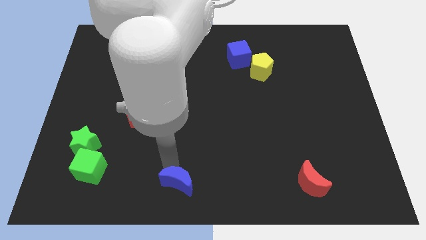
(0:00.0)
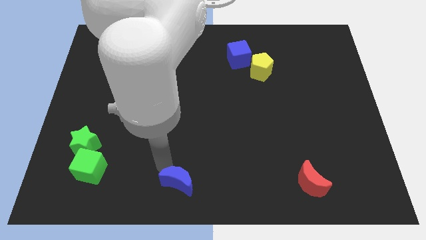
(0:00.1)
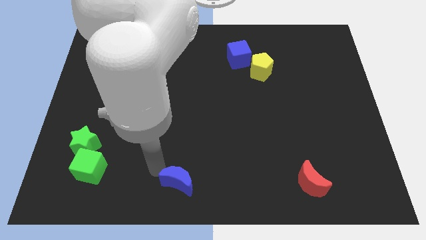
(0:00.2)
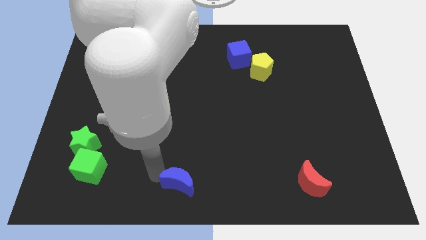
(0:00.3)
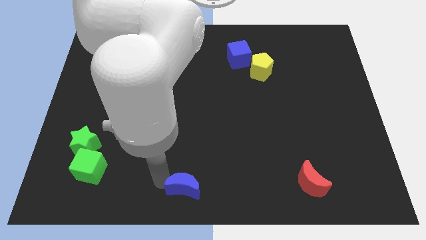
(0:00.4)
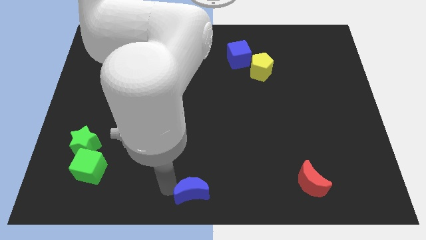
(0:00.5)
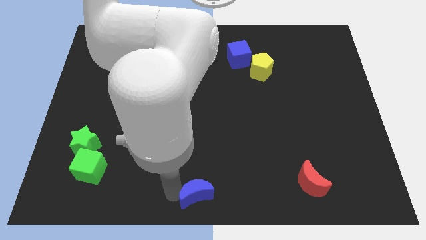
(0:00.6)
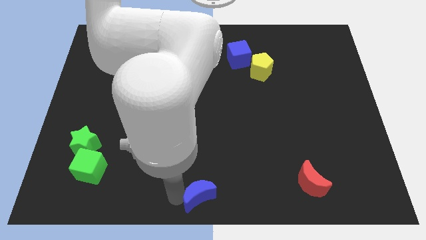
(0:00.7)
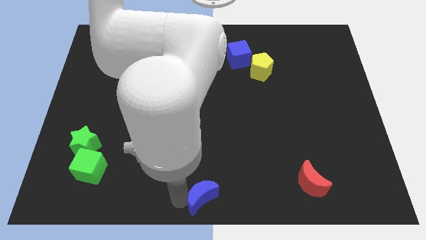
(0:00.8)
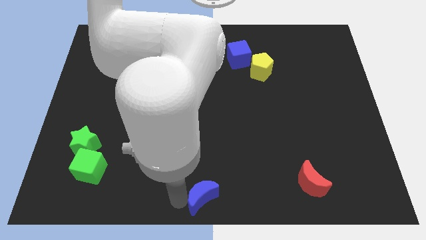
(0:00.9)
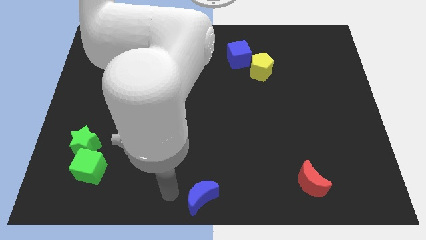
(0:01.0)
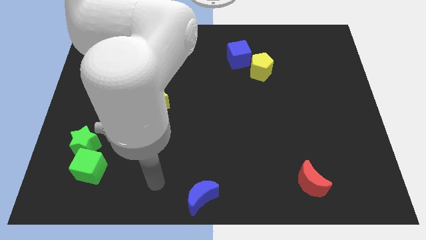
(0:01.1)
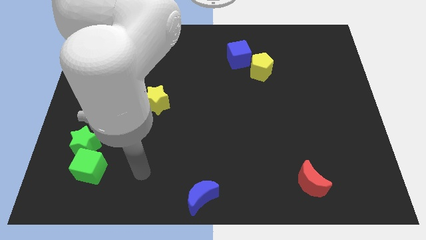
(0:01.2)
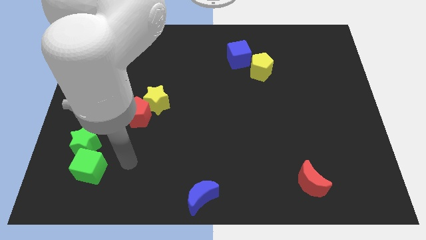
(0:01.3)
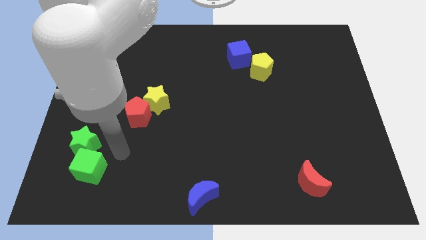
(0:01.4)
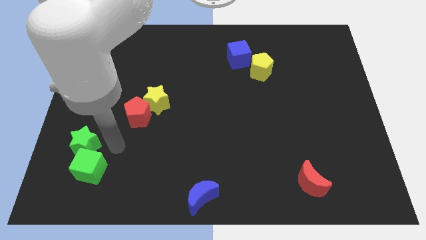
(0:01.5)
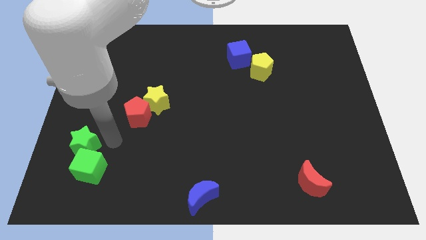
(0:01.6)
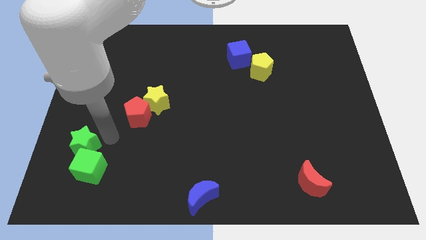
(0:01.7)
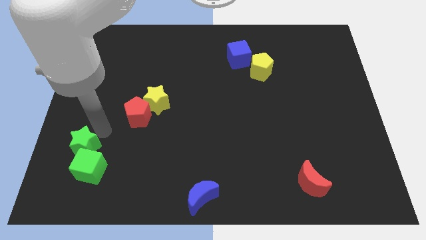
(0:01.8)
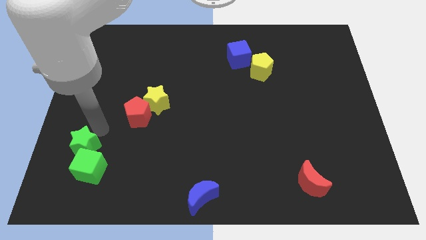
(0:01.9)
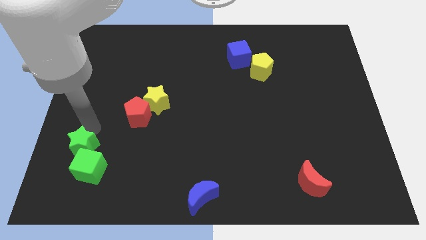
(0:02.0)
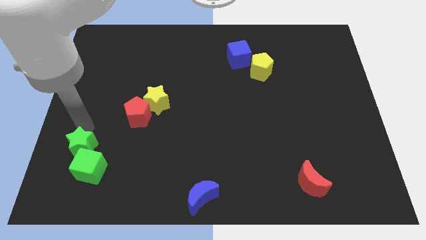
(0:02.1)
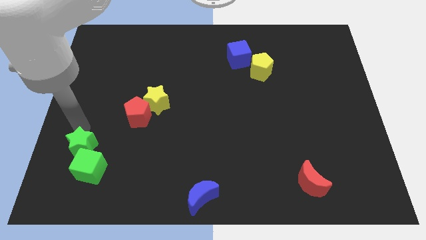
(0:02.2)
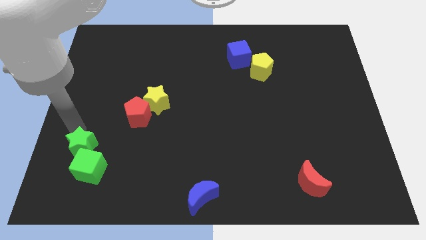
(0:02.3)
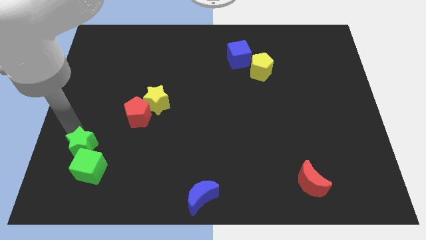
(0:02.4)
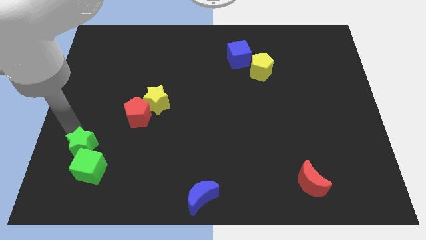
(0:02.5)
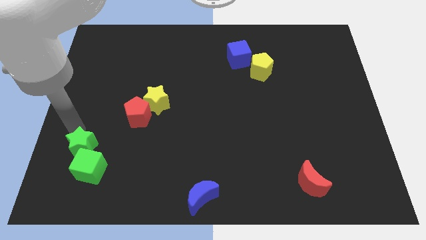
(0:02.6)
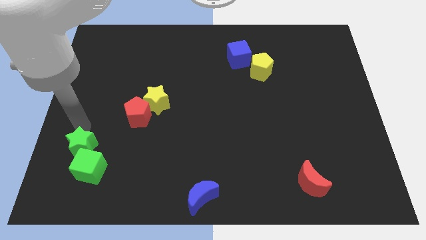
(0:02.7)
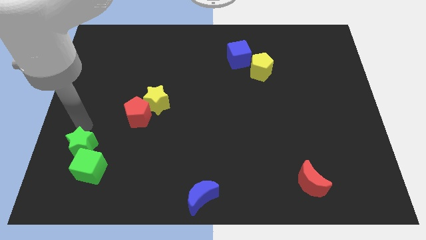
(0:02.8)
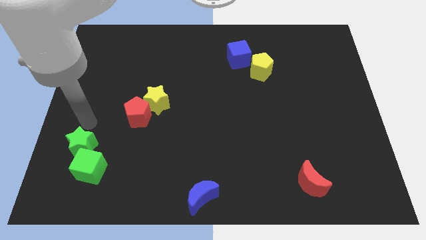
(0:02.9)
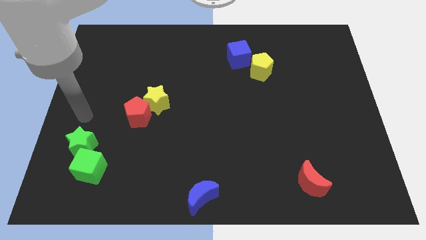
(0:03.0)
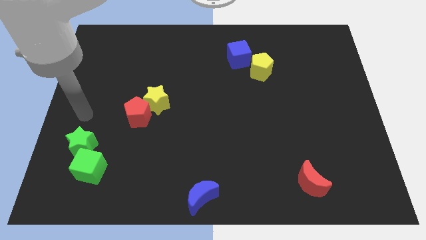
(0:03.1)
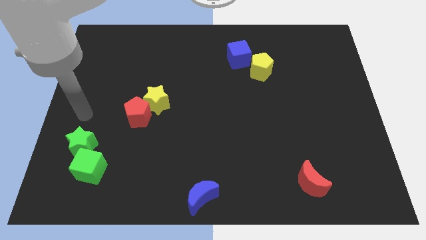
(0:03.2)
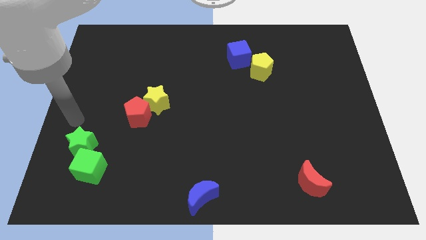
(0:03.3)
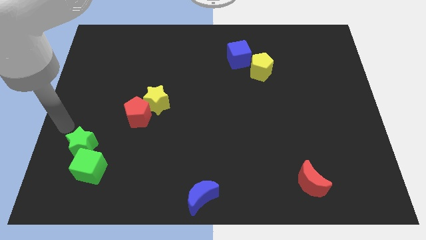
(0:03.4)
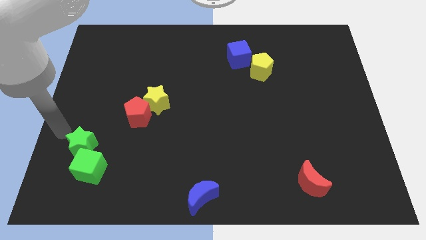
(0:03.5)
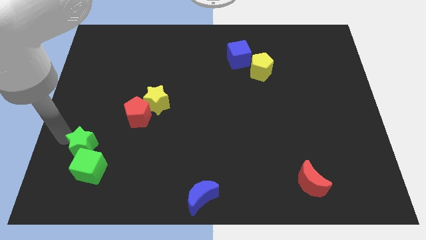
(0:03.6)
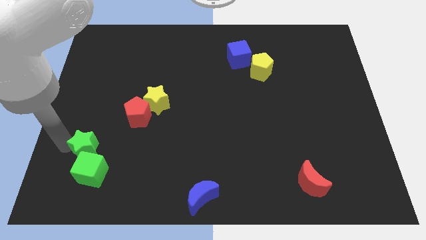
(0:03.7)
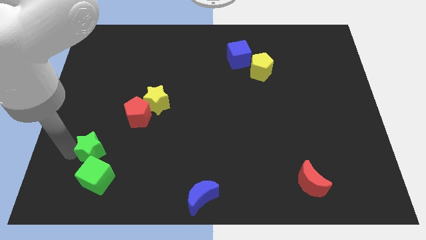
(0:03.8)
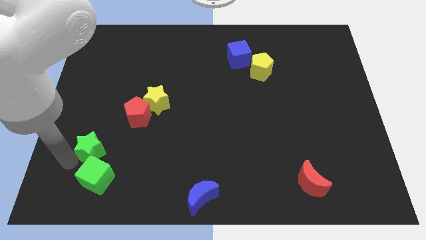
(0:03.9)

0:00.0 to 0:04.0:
slightly push the green blocks down to the board

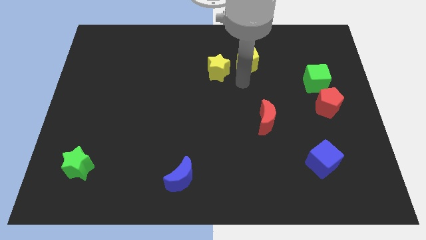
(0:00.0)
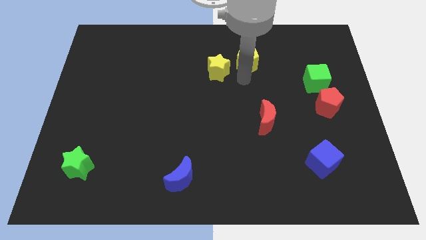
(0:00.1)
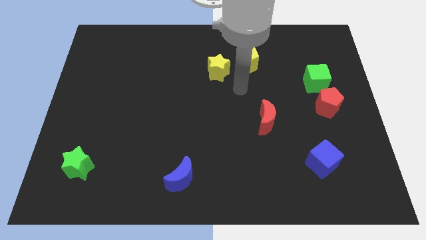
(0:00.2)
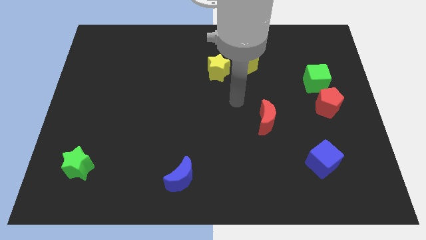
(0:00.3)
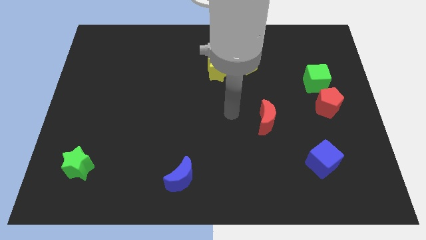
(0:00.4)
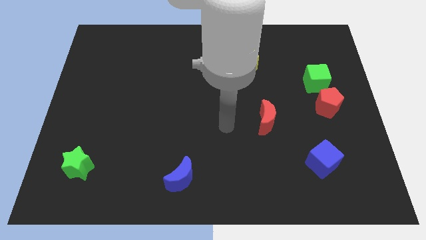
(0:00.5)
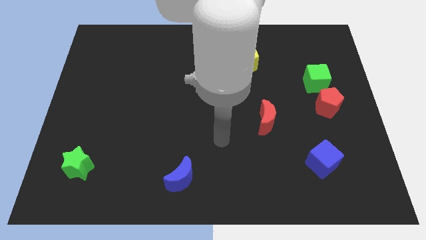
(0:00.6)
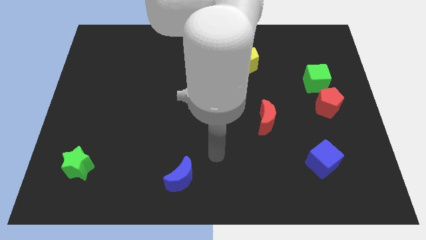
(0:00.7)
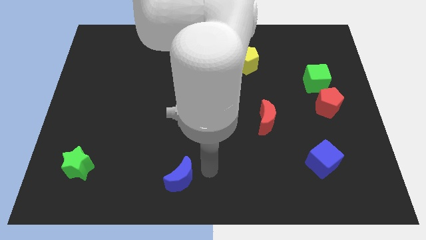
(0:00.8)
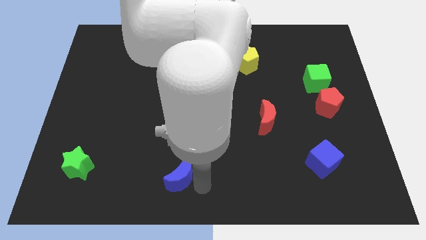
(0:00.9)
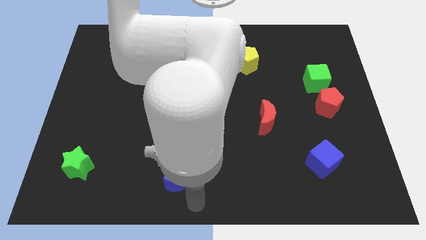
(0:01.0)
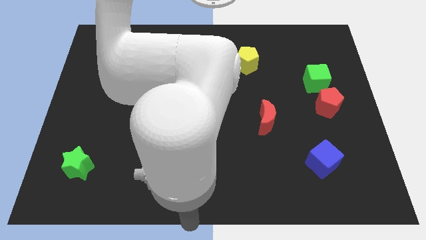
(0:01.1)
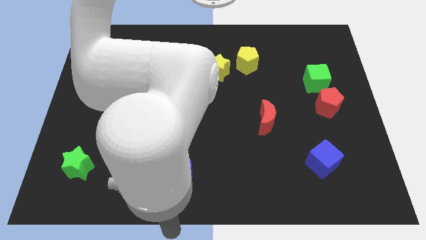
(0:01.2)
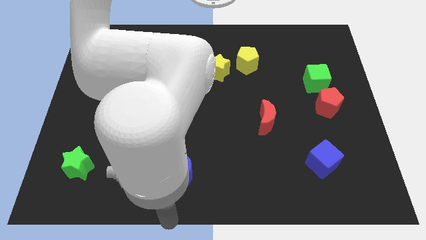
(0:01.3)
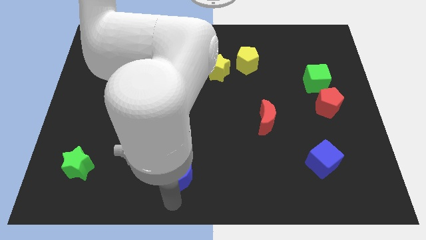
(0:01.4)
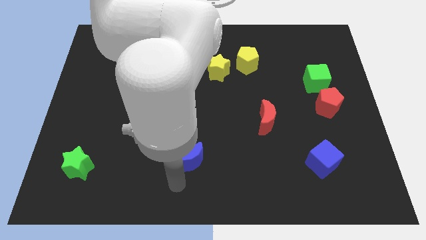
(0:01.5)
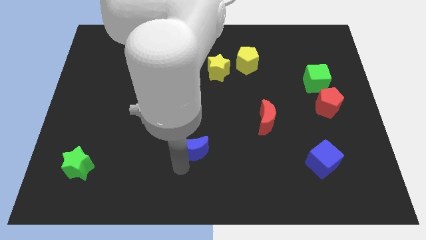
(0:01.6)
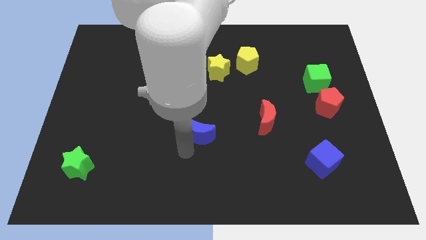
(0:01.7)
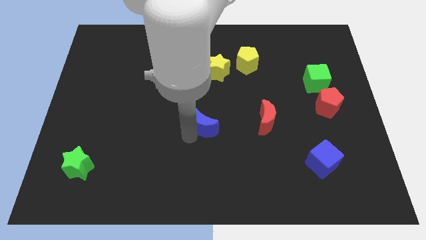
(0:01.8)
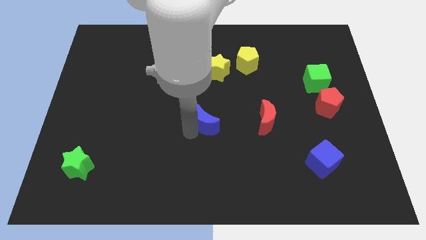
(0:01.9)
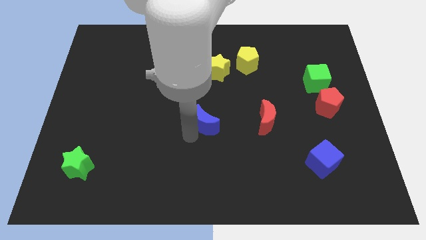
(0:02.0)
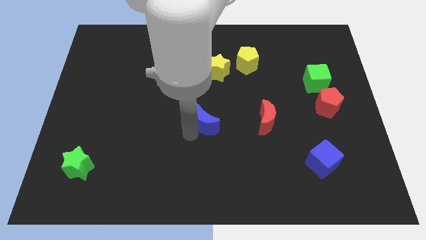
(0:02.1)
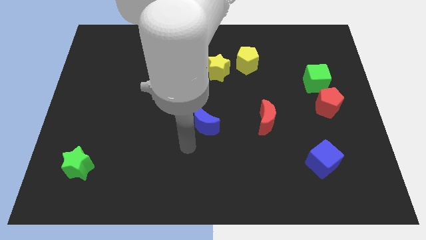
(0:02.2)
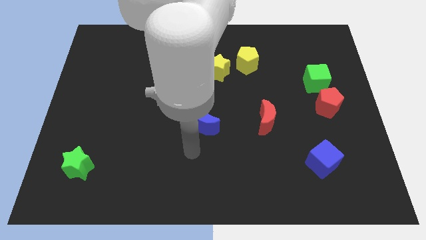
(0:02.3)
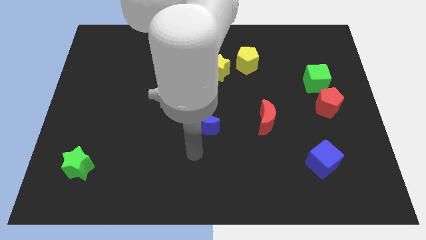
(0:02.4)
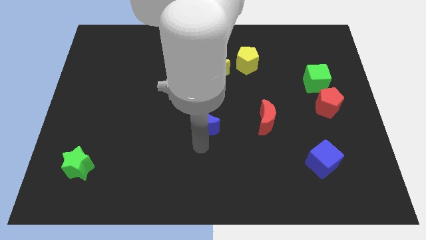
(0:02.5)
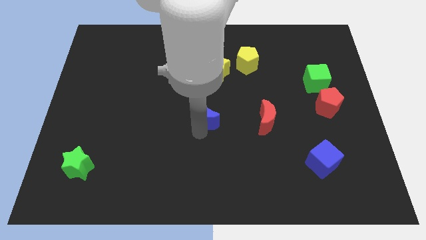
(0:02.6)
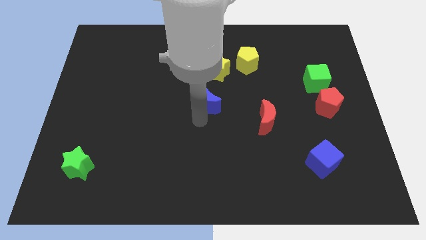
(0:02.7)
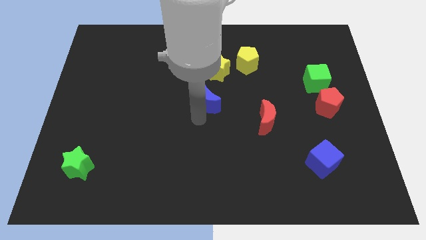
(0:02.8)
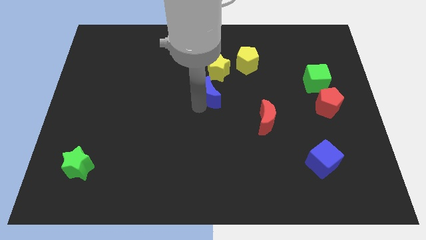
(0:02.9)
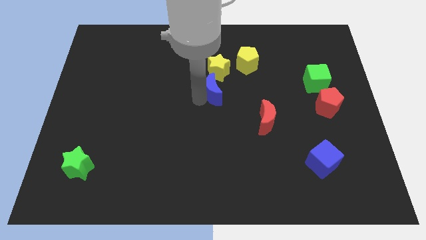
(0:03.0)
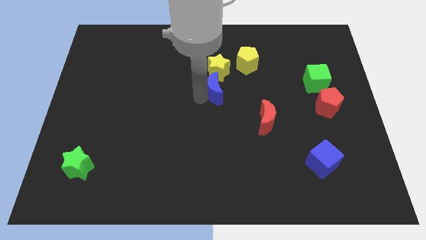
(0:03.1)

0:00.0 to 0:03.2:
place the blue moon to the center of the board

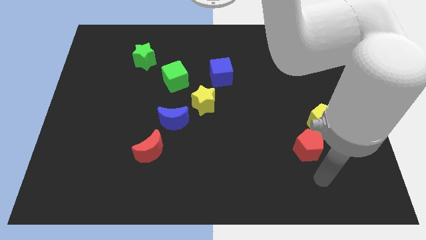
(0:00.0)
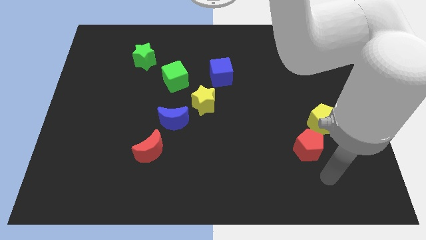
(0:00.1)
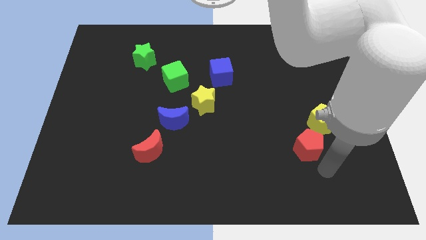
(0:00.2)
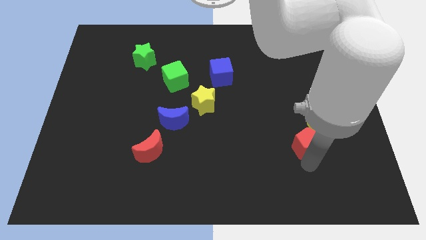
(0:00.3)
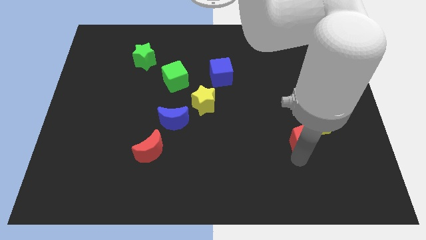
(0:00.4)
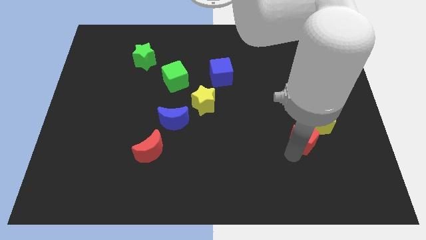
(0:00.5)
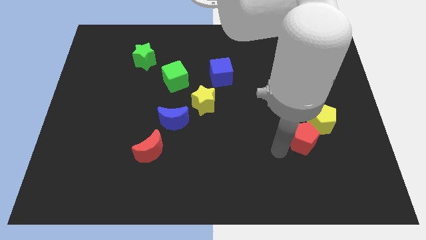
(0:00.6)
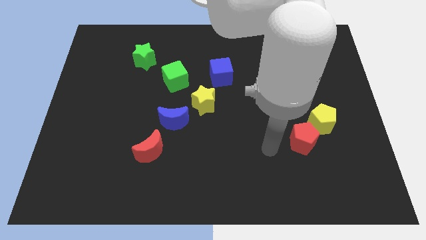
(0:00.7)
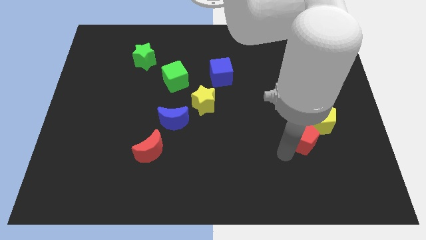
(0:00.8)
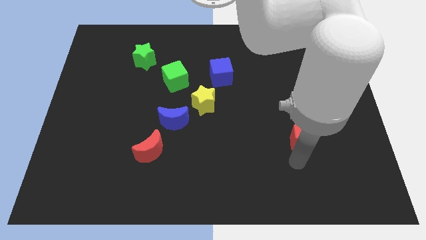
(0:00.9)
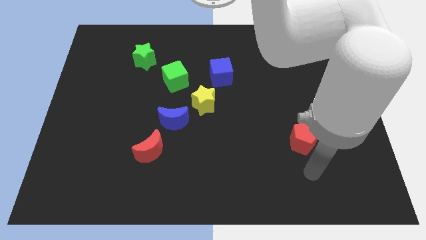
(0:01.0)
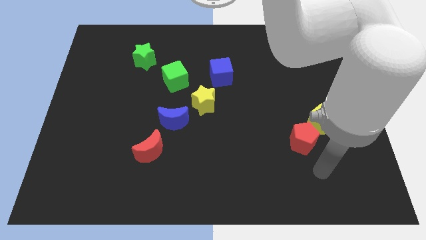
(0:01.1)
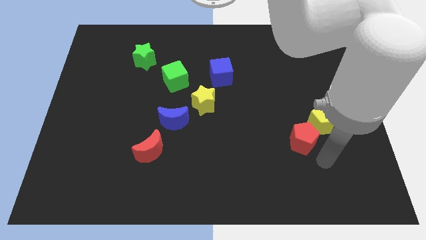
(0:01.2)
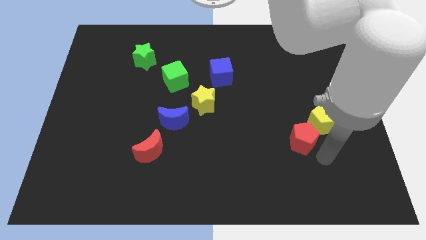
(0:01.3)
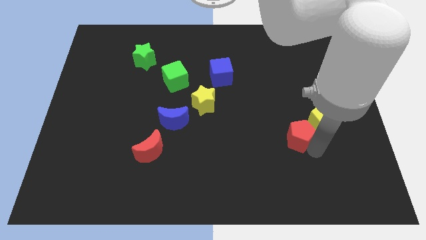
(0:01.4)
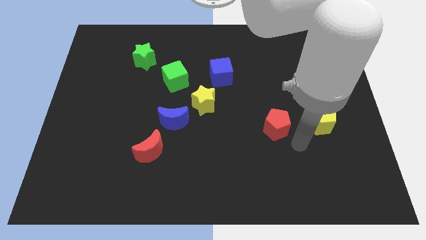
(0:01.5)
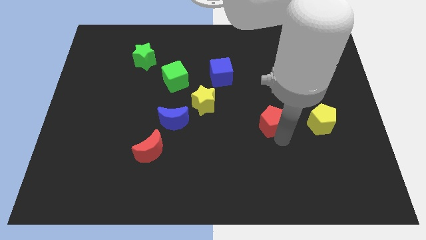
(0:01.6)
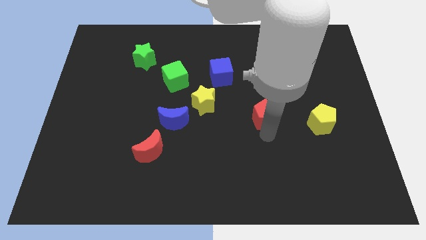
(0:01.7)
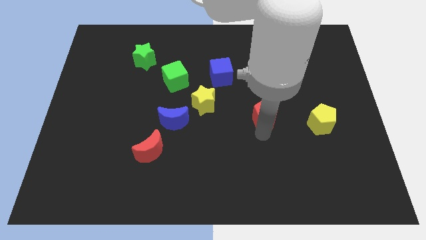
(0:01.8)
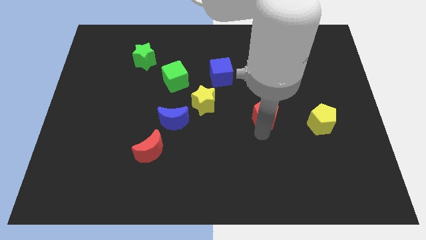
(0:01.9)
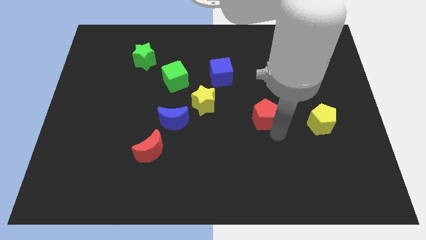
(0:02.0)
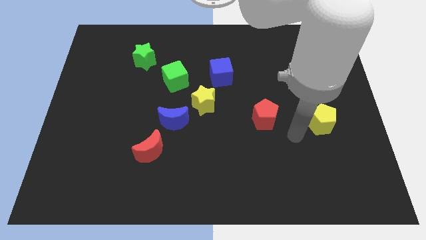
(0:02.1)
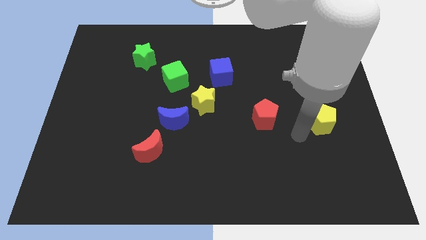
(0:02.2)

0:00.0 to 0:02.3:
move the red pentagon in between yellow star and pentagon
